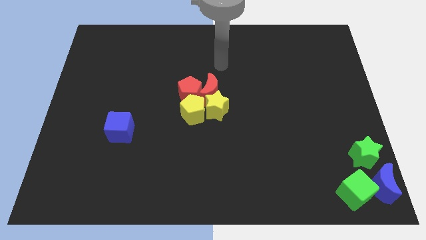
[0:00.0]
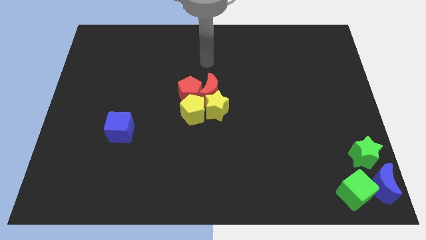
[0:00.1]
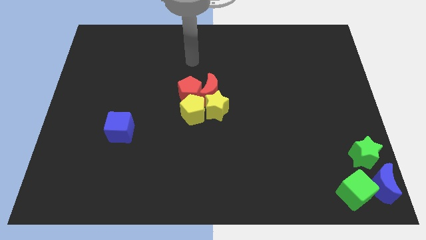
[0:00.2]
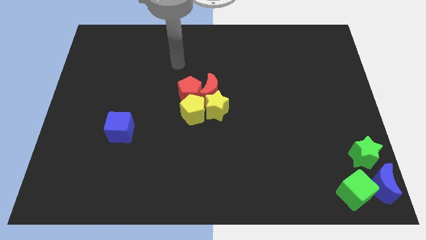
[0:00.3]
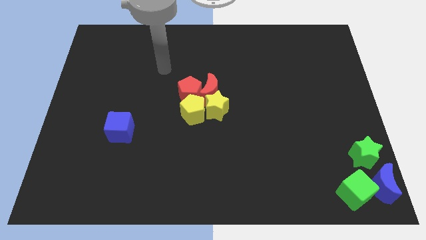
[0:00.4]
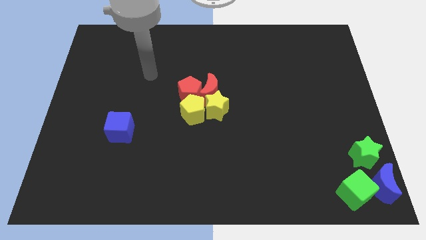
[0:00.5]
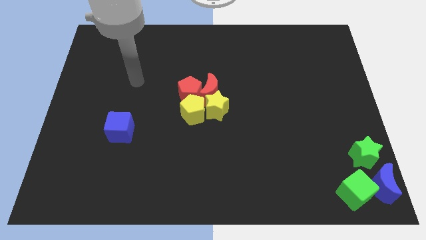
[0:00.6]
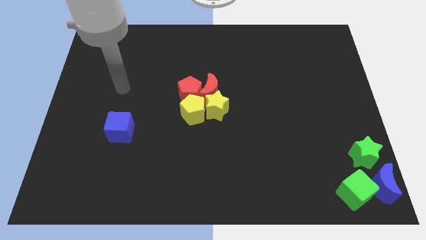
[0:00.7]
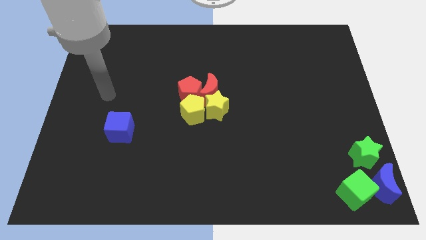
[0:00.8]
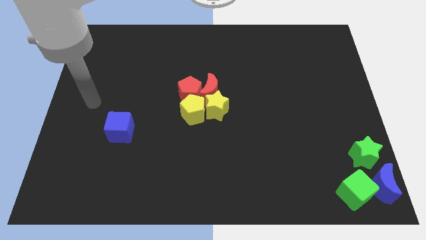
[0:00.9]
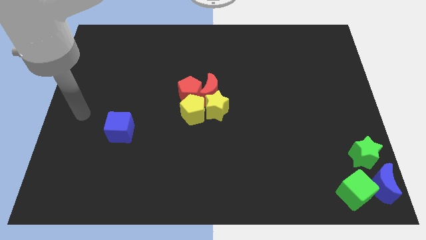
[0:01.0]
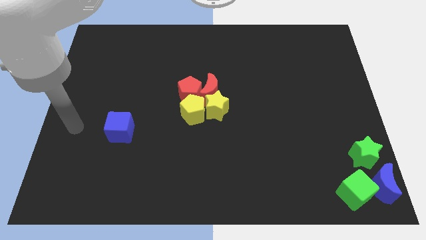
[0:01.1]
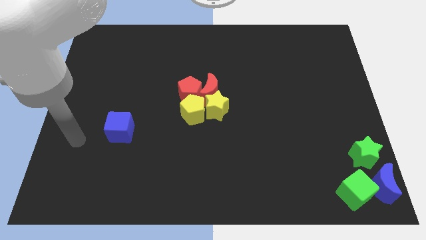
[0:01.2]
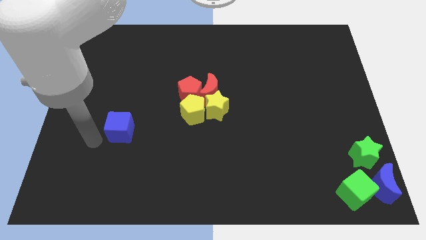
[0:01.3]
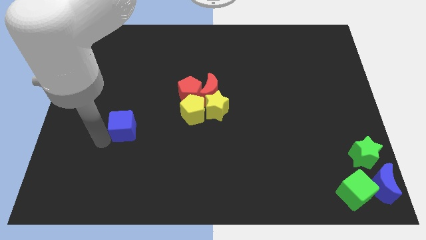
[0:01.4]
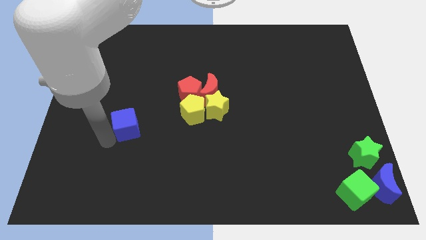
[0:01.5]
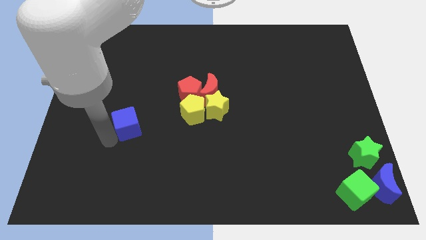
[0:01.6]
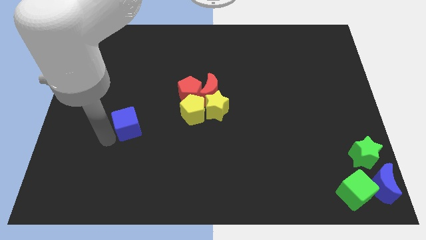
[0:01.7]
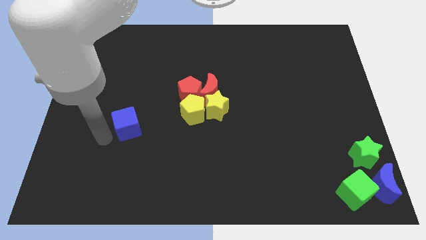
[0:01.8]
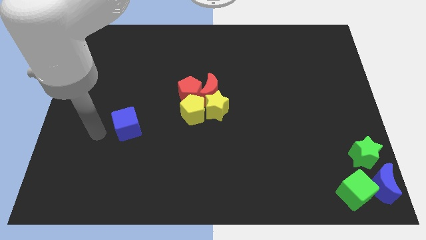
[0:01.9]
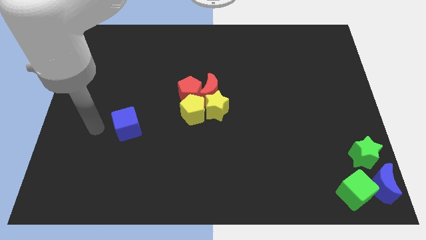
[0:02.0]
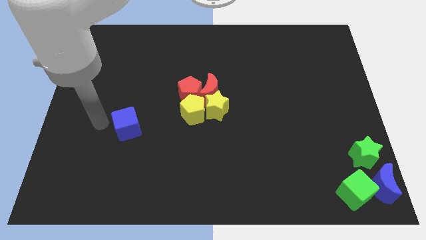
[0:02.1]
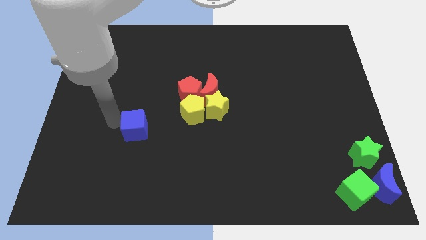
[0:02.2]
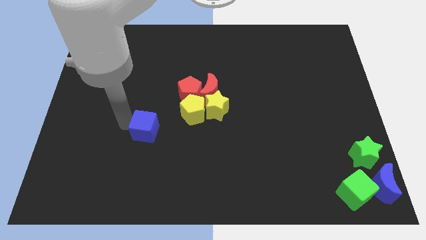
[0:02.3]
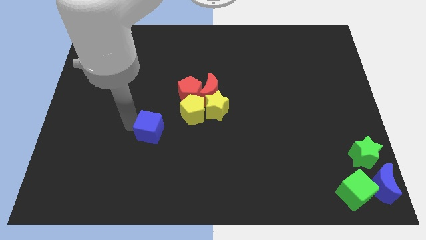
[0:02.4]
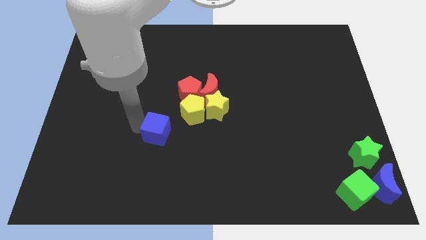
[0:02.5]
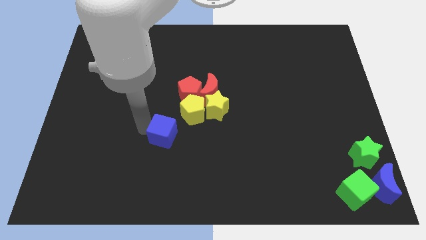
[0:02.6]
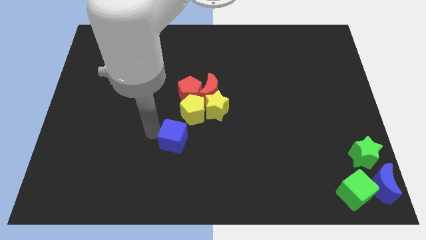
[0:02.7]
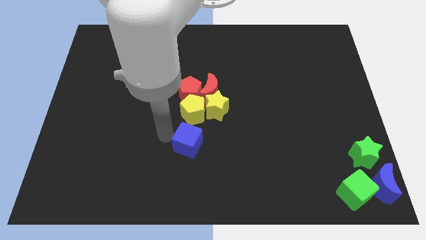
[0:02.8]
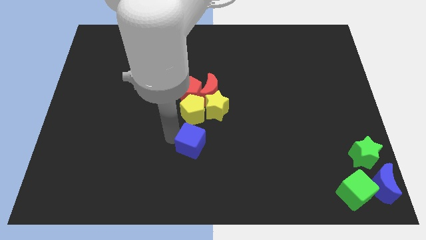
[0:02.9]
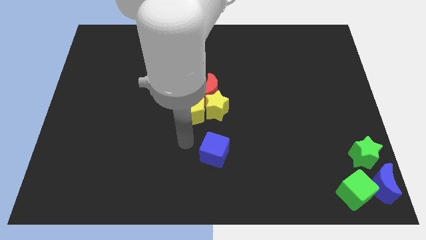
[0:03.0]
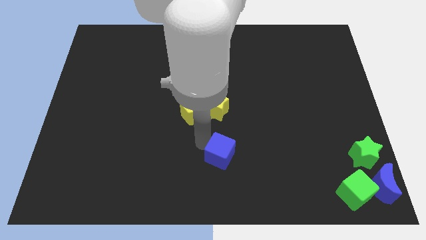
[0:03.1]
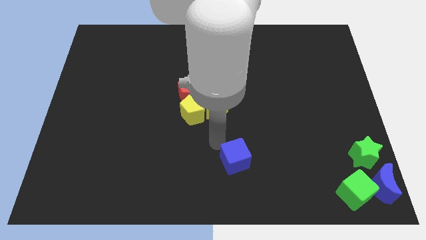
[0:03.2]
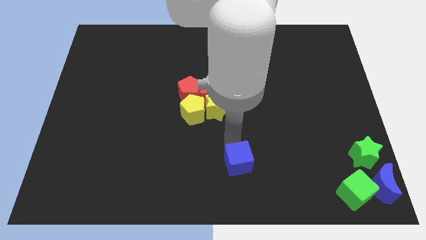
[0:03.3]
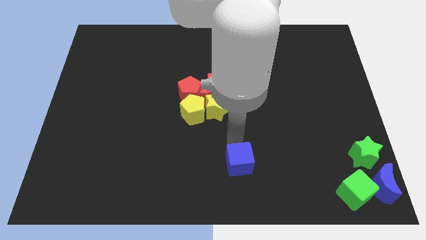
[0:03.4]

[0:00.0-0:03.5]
slide the blue cube slightly towards the green cube

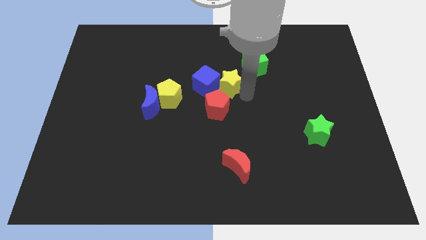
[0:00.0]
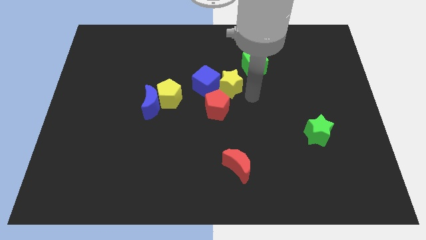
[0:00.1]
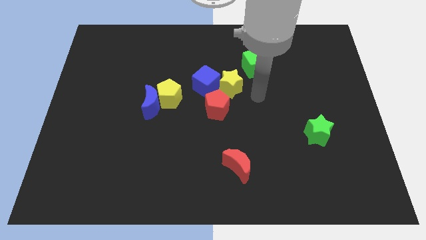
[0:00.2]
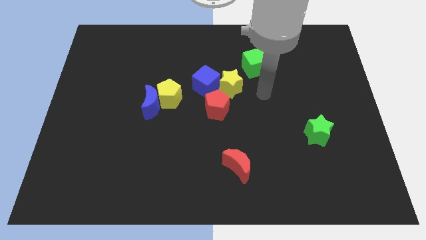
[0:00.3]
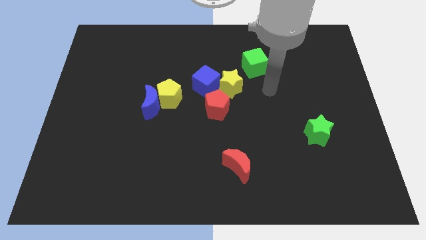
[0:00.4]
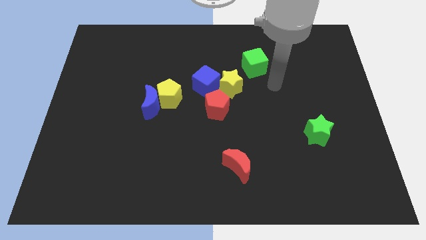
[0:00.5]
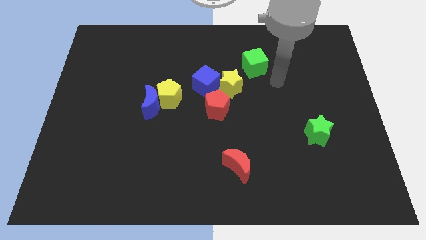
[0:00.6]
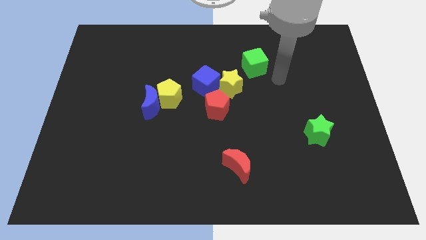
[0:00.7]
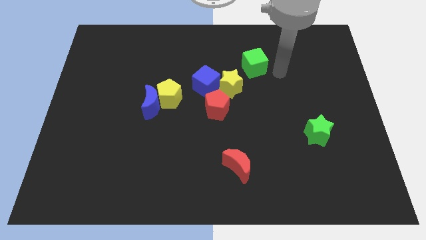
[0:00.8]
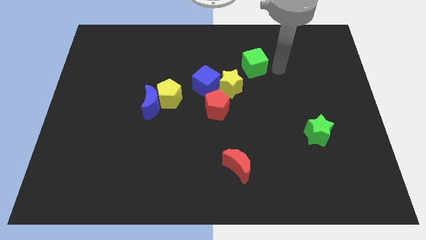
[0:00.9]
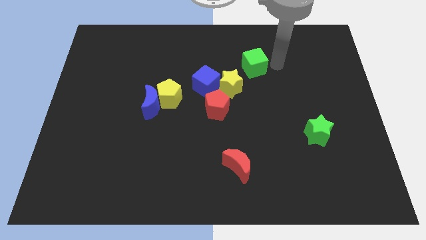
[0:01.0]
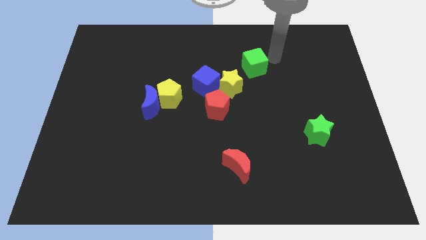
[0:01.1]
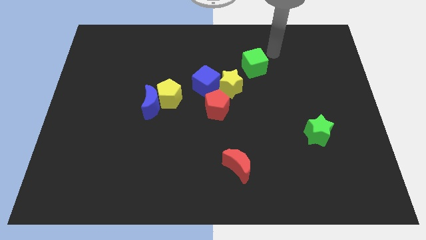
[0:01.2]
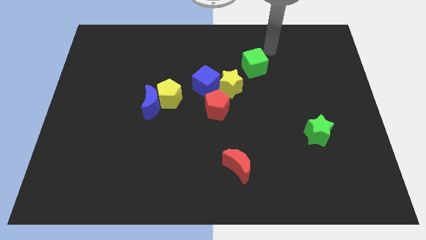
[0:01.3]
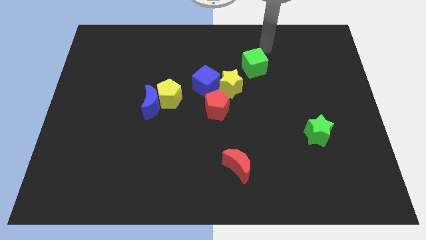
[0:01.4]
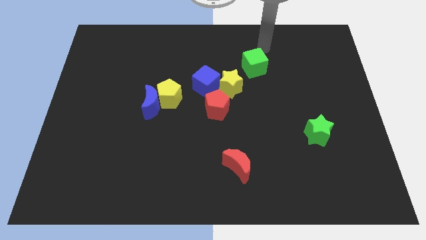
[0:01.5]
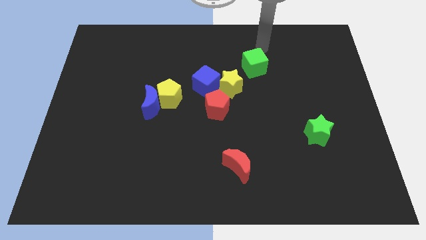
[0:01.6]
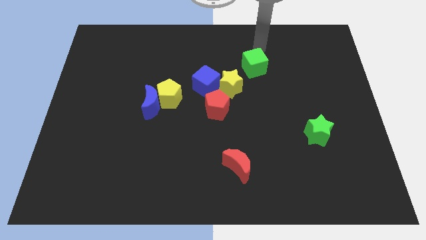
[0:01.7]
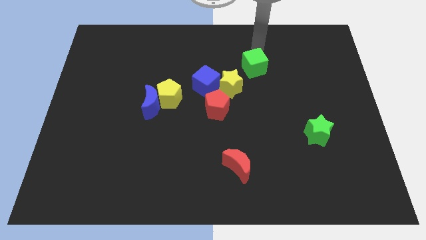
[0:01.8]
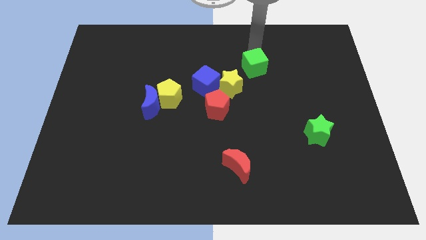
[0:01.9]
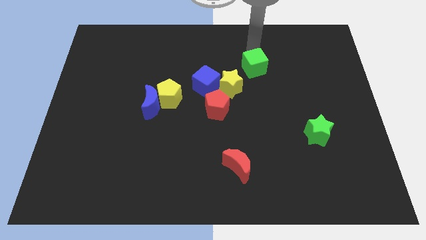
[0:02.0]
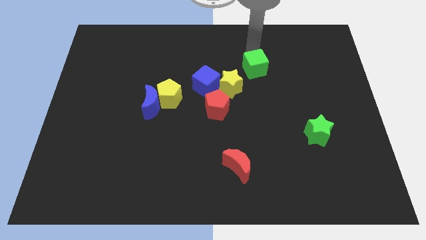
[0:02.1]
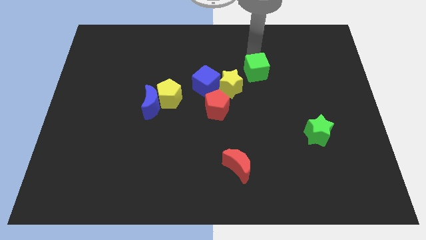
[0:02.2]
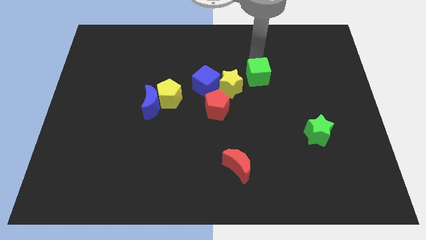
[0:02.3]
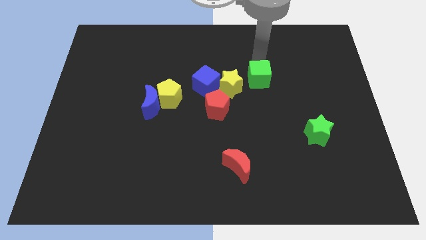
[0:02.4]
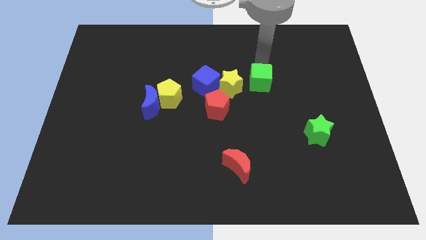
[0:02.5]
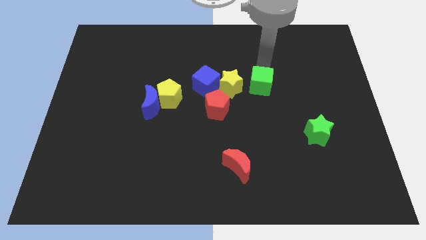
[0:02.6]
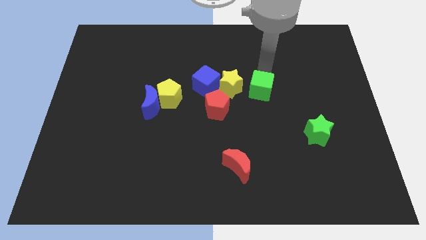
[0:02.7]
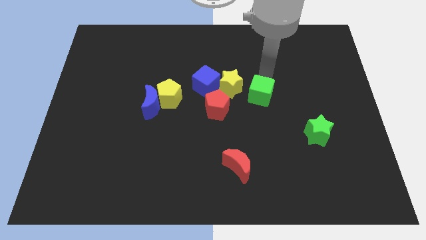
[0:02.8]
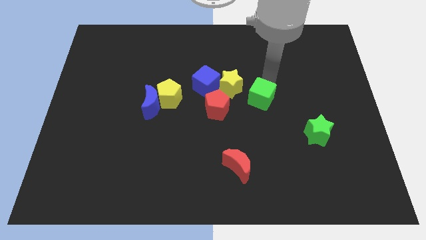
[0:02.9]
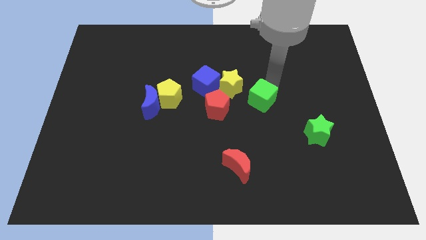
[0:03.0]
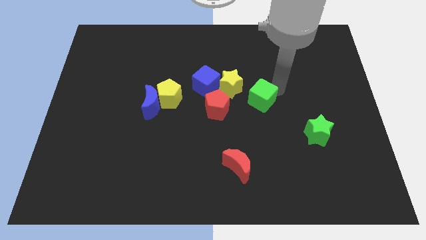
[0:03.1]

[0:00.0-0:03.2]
push the green cube slightly towards bottom

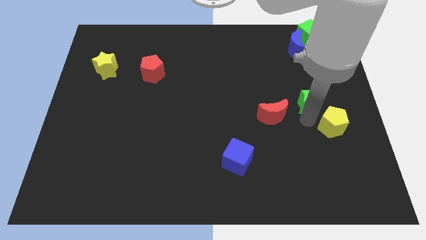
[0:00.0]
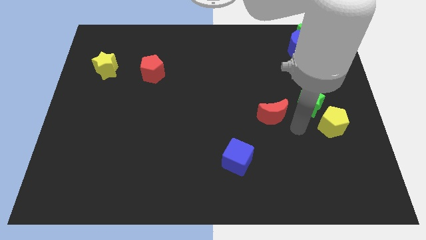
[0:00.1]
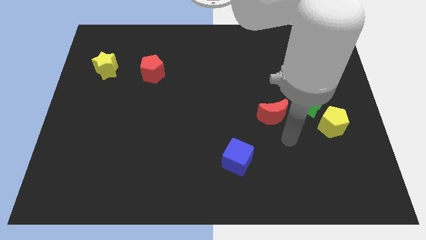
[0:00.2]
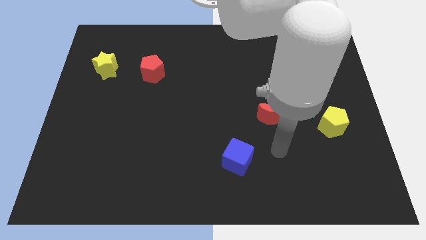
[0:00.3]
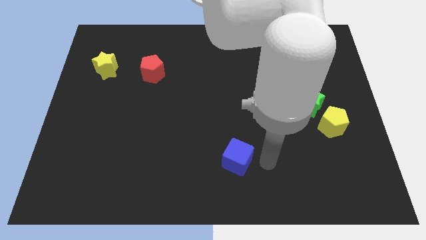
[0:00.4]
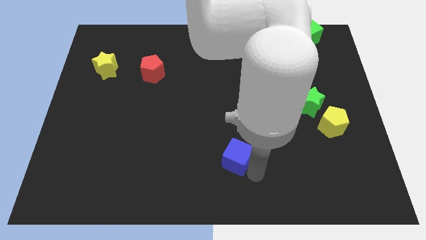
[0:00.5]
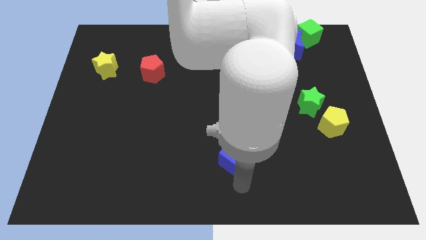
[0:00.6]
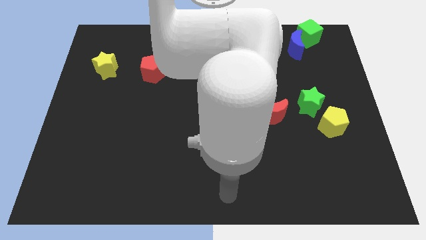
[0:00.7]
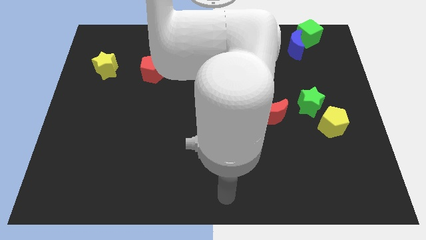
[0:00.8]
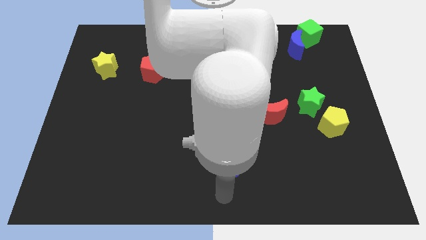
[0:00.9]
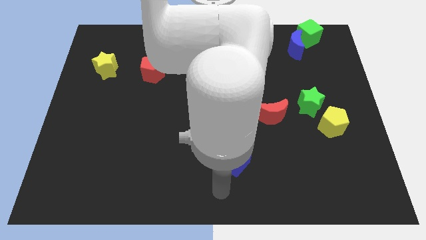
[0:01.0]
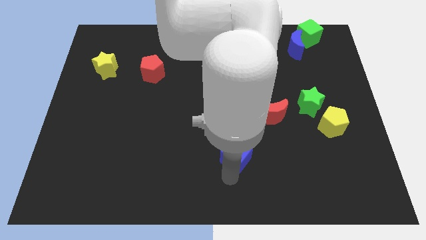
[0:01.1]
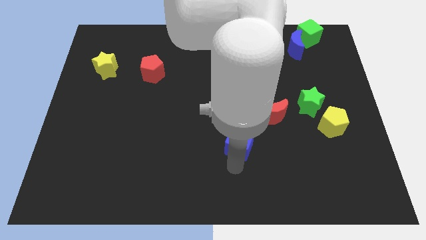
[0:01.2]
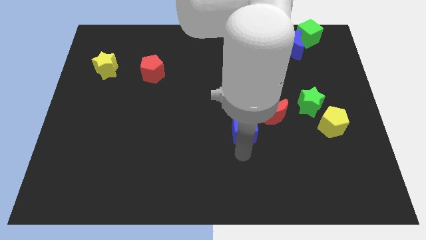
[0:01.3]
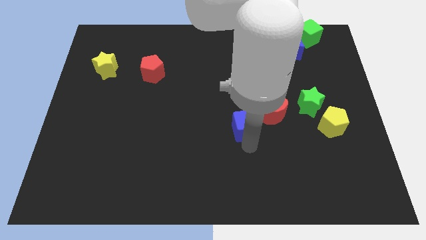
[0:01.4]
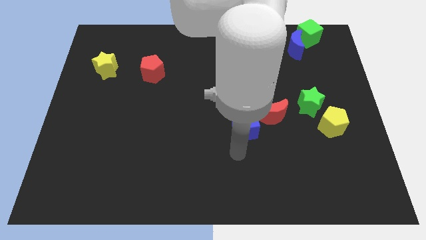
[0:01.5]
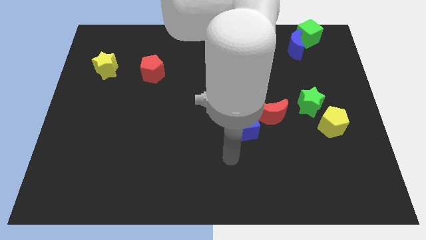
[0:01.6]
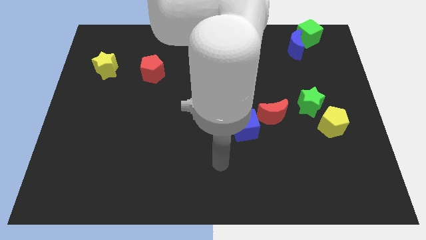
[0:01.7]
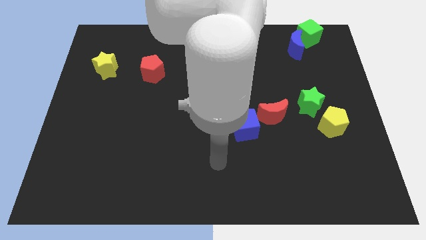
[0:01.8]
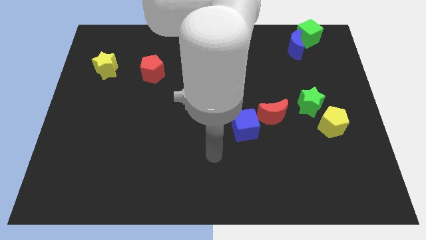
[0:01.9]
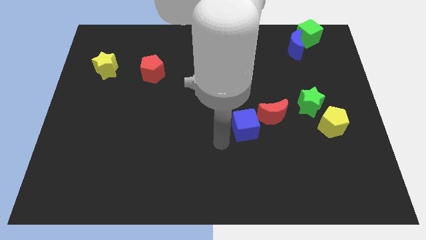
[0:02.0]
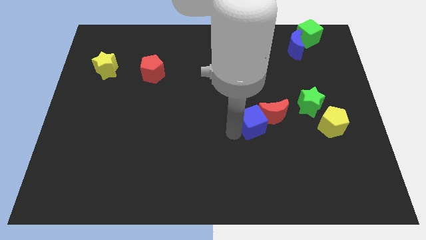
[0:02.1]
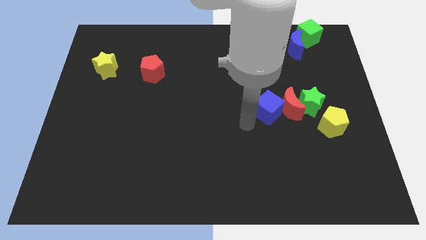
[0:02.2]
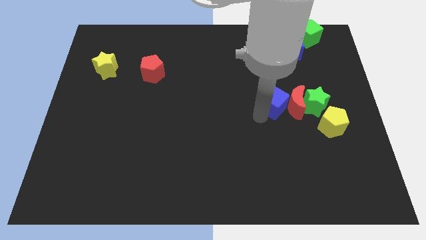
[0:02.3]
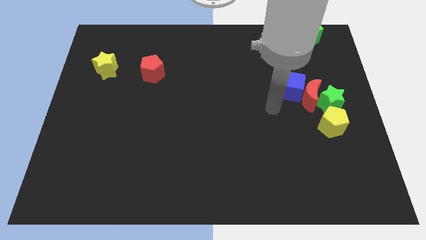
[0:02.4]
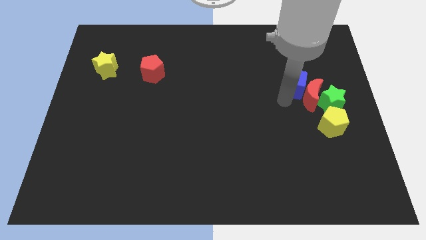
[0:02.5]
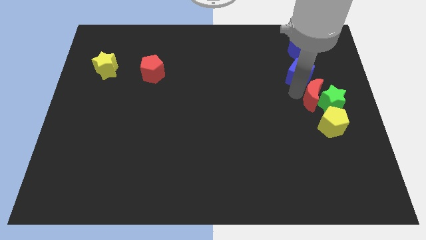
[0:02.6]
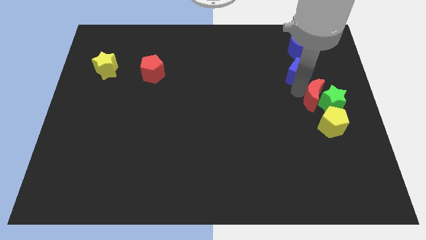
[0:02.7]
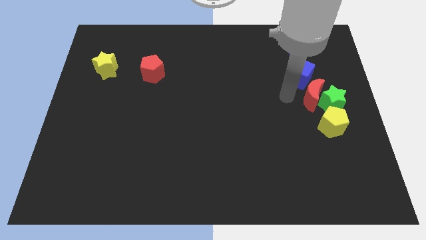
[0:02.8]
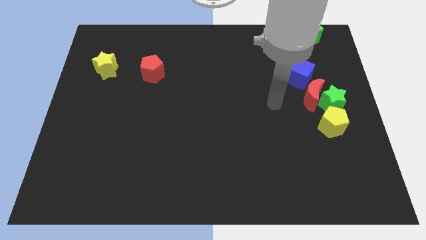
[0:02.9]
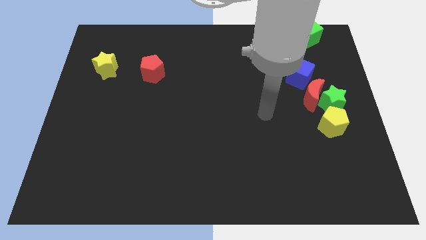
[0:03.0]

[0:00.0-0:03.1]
move the blue cube and red moon together below blue moon
